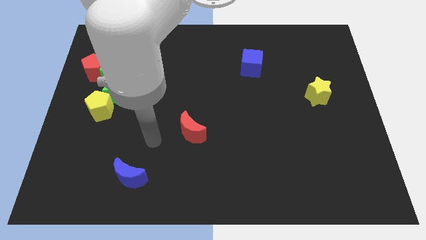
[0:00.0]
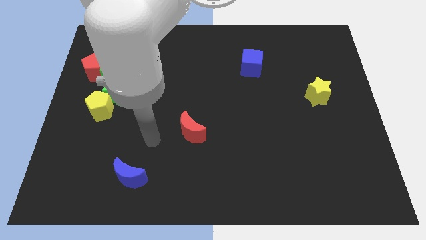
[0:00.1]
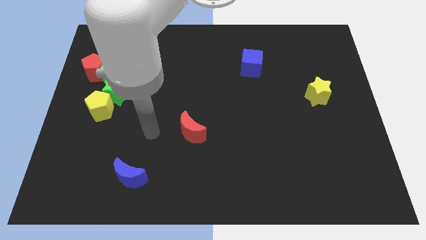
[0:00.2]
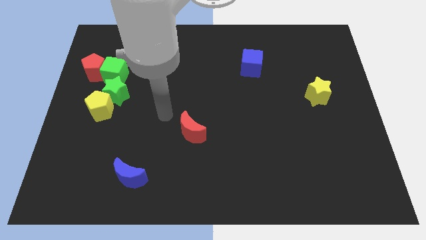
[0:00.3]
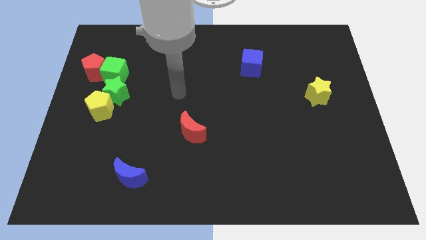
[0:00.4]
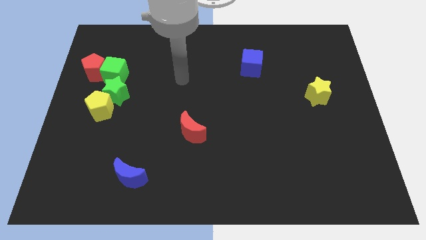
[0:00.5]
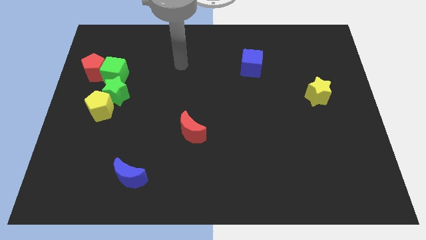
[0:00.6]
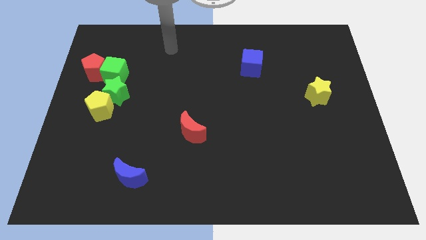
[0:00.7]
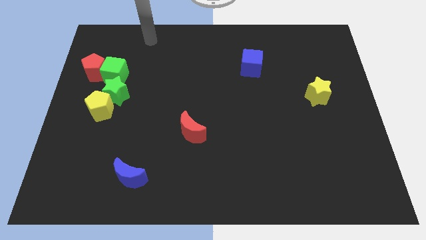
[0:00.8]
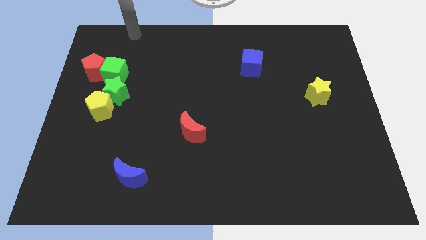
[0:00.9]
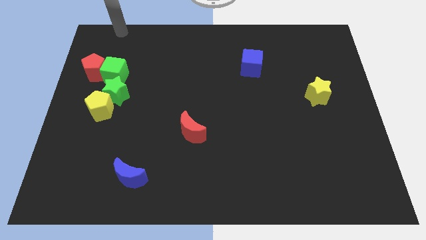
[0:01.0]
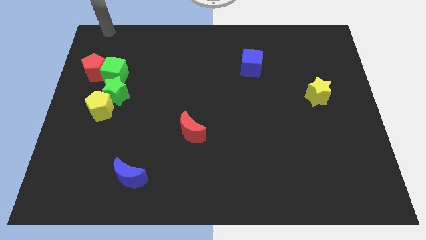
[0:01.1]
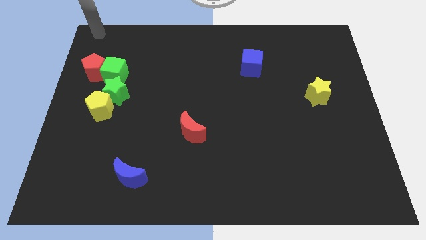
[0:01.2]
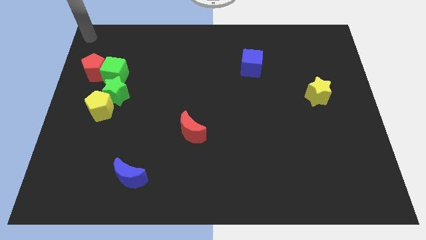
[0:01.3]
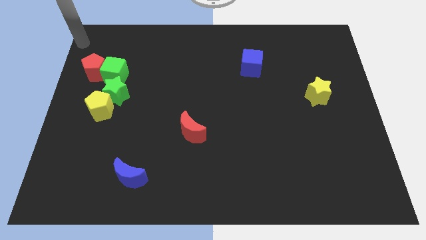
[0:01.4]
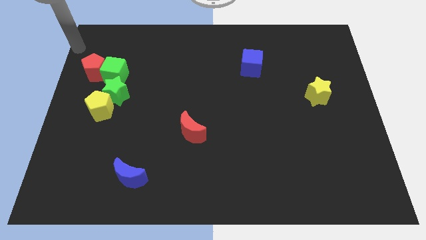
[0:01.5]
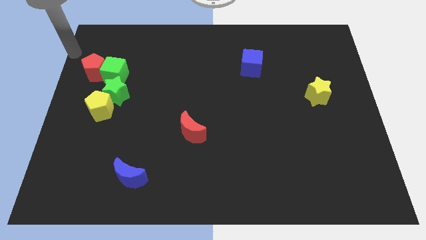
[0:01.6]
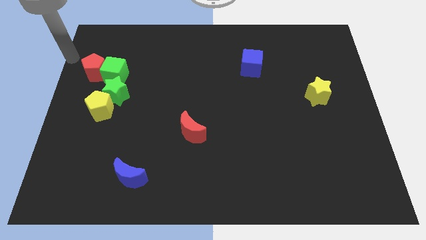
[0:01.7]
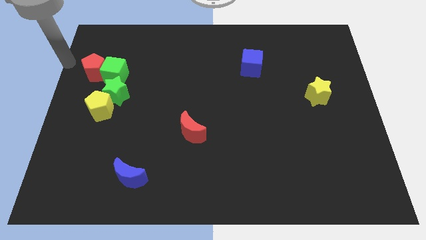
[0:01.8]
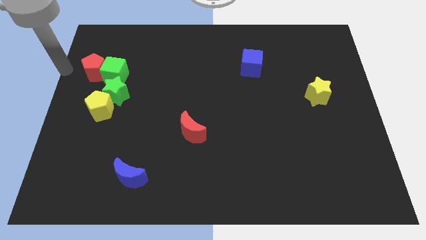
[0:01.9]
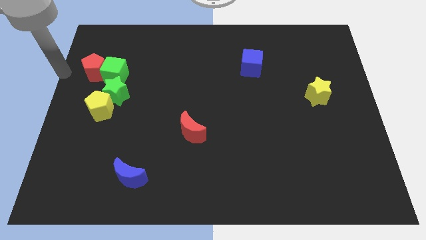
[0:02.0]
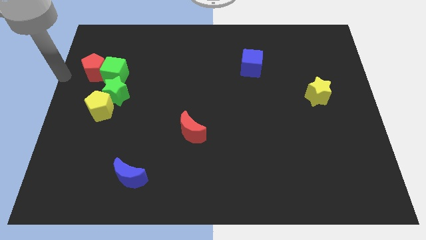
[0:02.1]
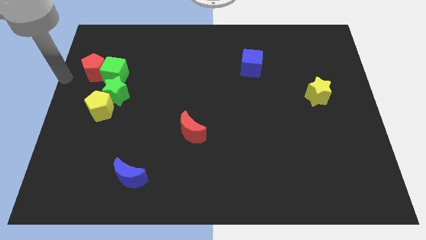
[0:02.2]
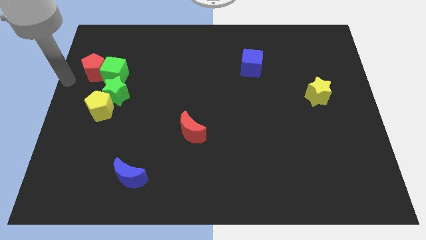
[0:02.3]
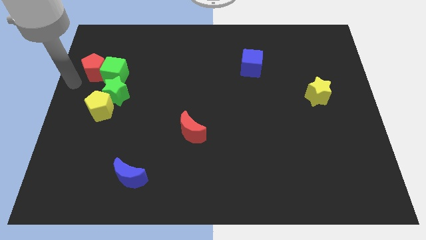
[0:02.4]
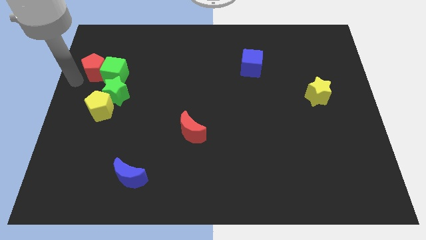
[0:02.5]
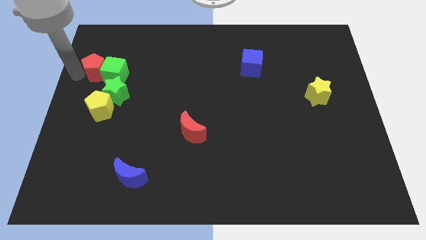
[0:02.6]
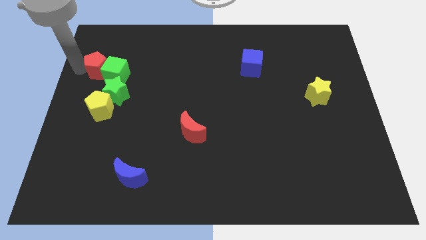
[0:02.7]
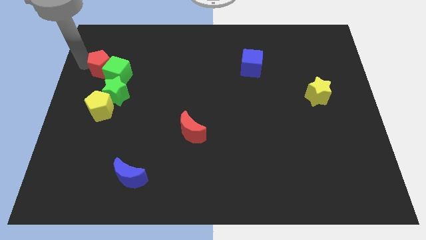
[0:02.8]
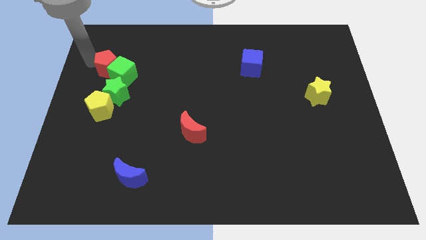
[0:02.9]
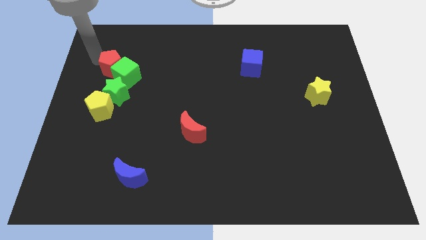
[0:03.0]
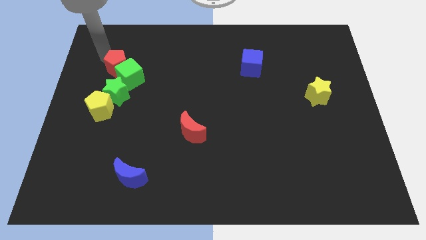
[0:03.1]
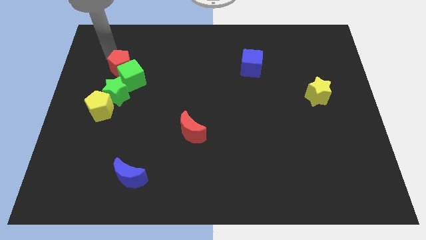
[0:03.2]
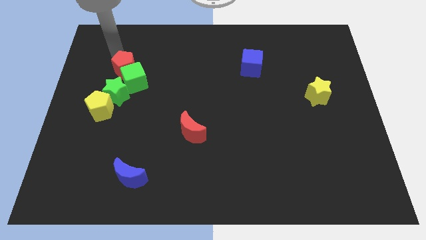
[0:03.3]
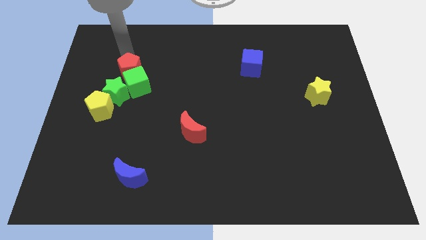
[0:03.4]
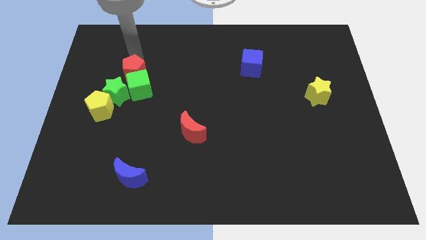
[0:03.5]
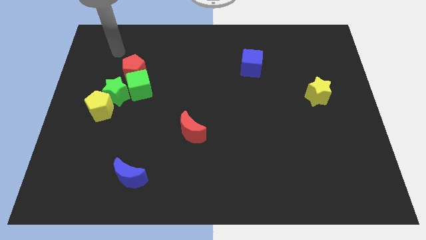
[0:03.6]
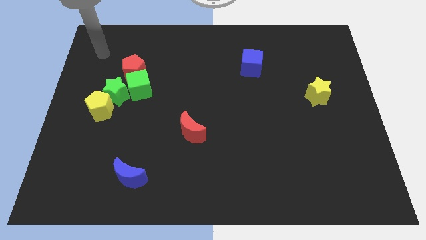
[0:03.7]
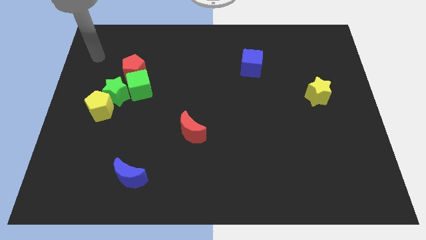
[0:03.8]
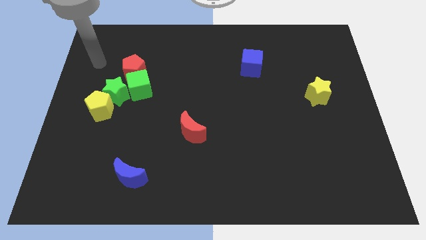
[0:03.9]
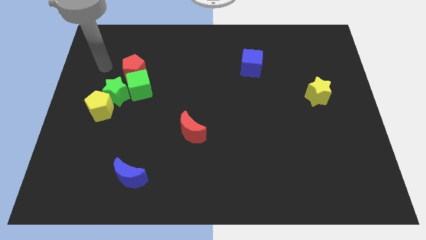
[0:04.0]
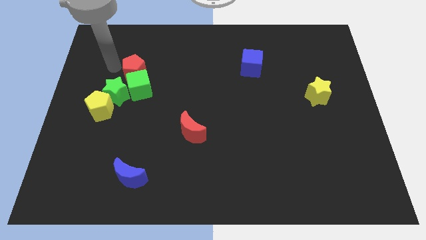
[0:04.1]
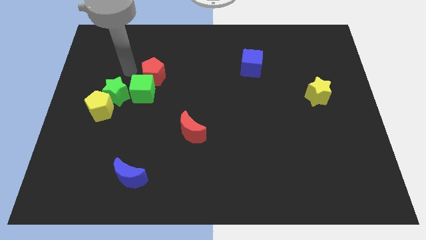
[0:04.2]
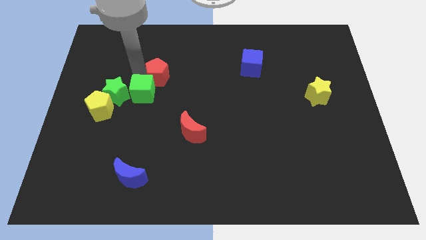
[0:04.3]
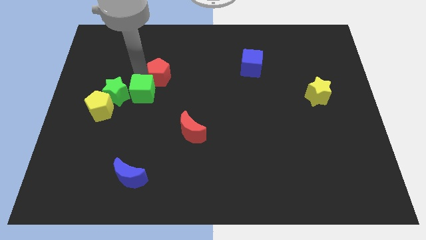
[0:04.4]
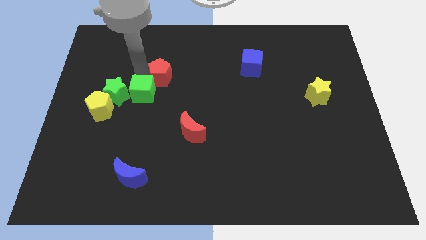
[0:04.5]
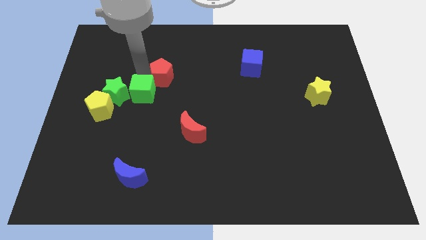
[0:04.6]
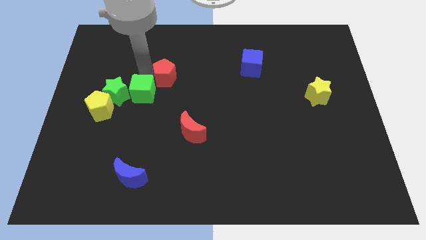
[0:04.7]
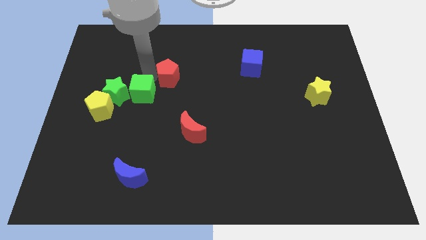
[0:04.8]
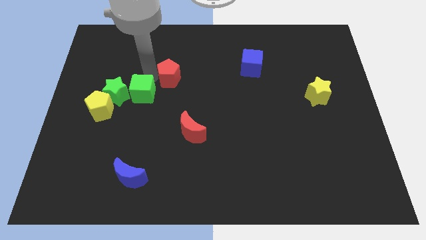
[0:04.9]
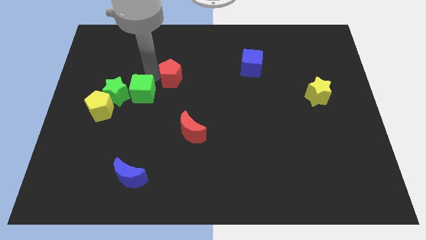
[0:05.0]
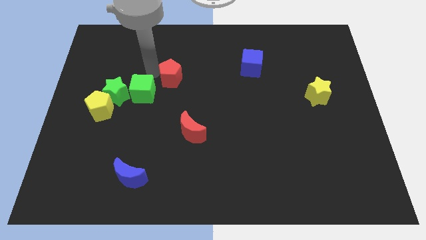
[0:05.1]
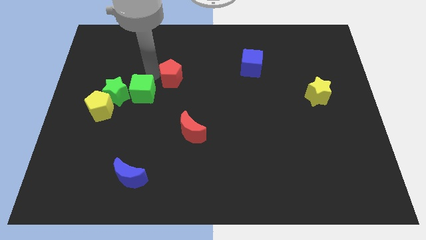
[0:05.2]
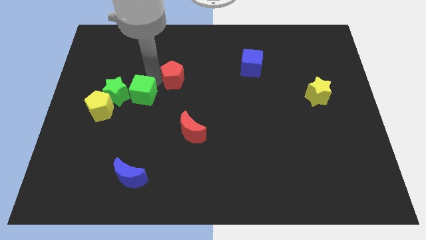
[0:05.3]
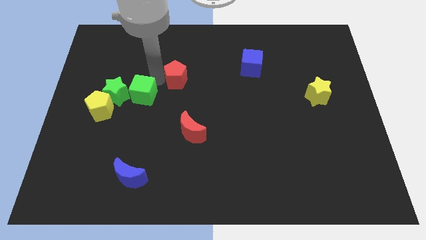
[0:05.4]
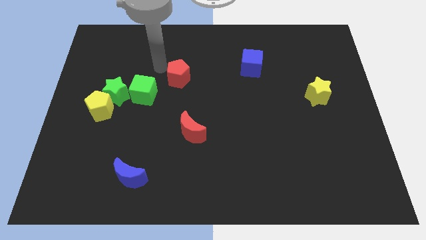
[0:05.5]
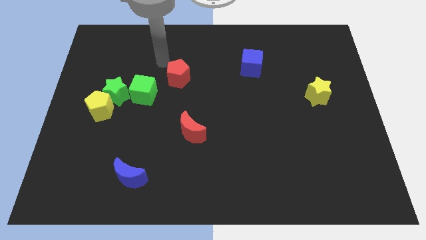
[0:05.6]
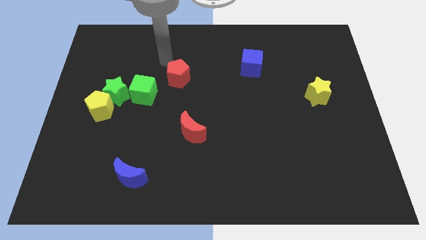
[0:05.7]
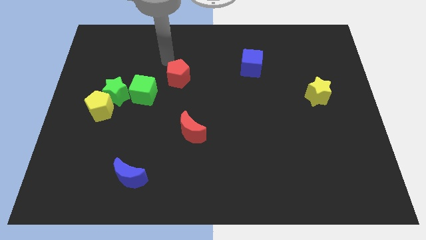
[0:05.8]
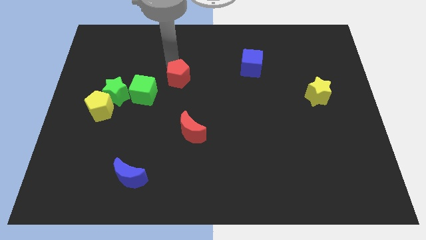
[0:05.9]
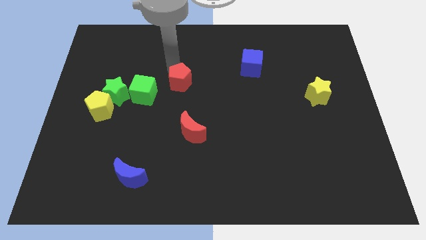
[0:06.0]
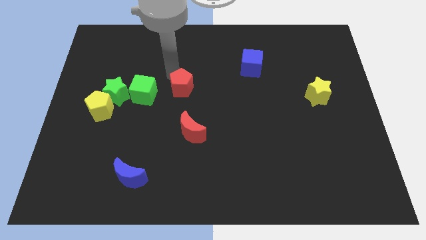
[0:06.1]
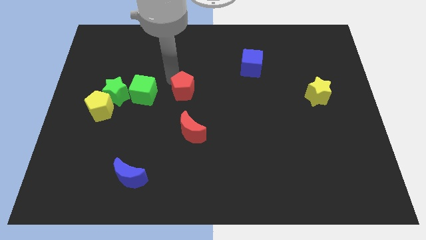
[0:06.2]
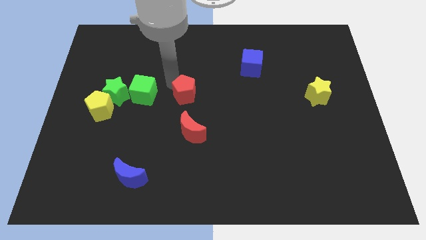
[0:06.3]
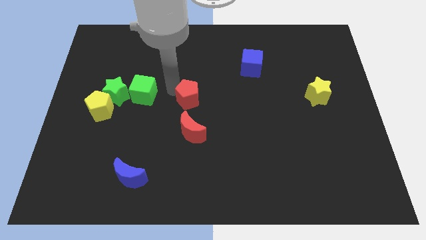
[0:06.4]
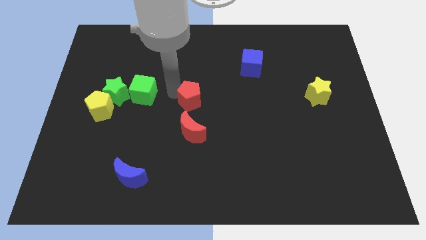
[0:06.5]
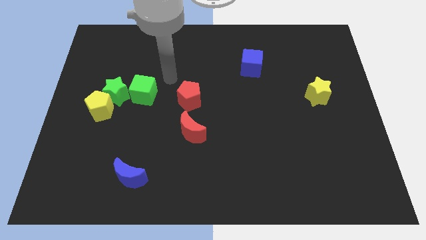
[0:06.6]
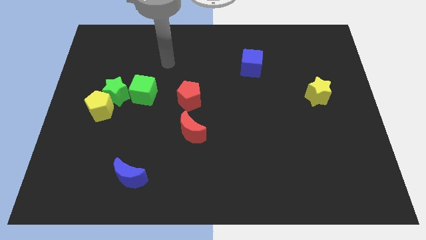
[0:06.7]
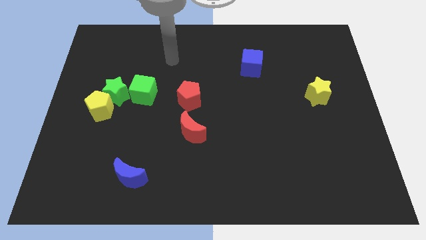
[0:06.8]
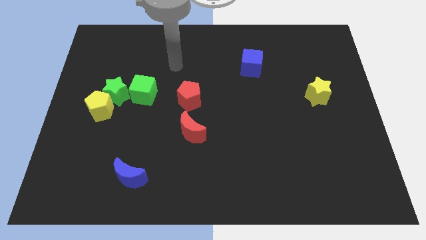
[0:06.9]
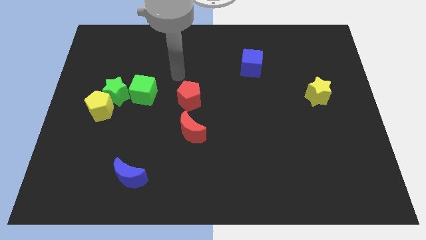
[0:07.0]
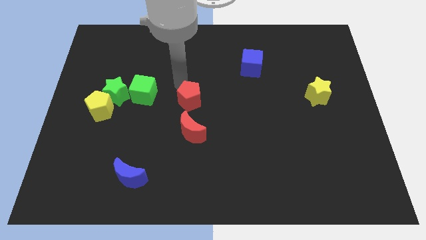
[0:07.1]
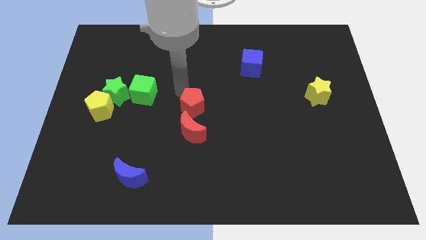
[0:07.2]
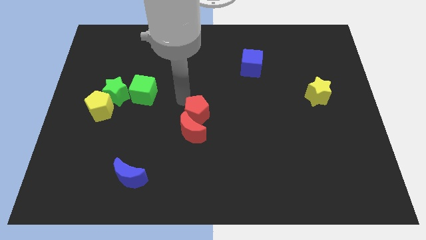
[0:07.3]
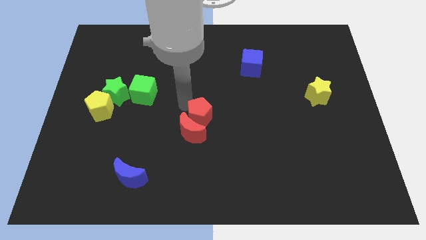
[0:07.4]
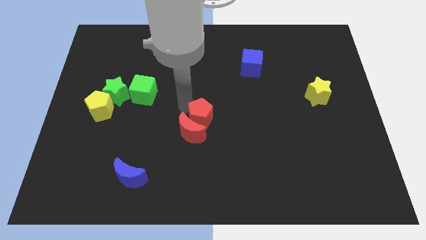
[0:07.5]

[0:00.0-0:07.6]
put the red pentagon towards the red moon

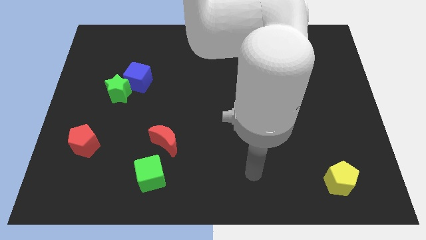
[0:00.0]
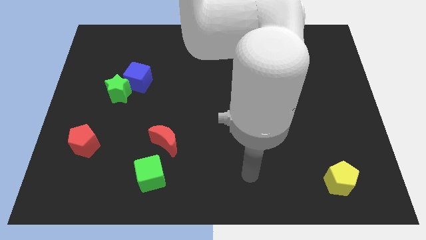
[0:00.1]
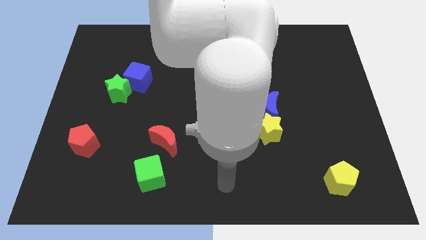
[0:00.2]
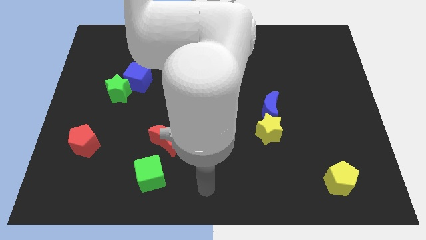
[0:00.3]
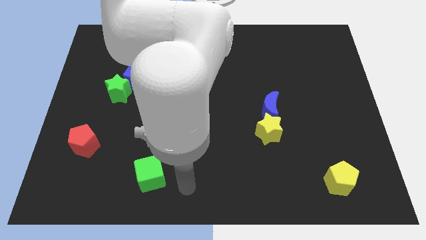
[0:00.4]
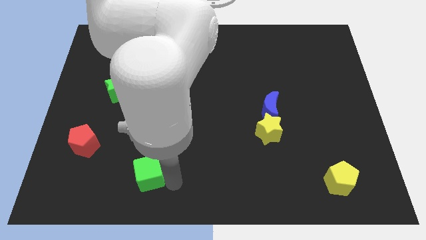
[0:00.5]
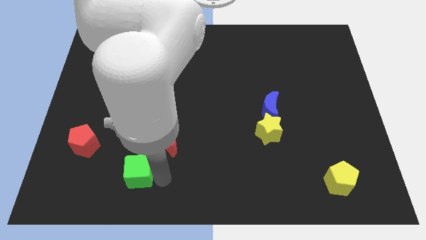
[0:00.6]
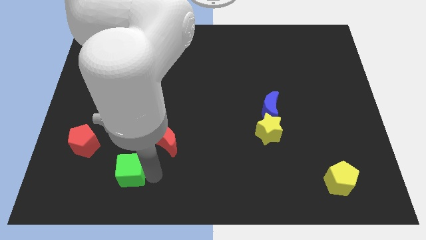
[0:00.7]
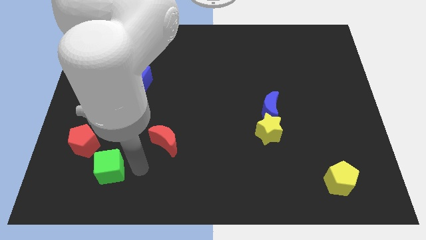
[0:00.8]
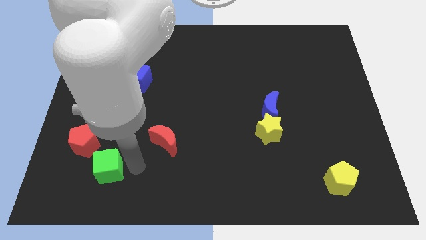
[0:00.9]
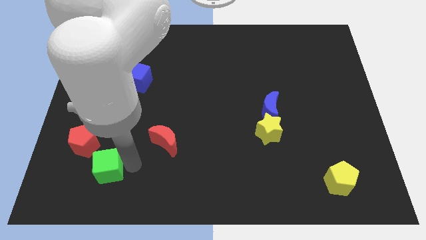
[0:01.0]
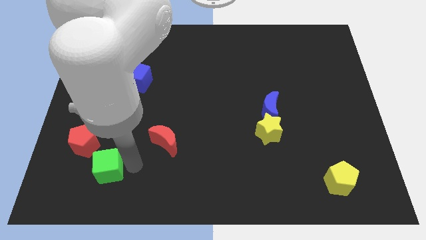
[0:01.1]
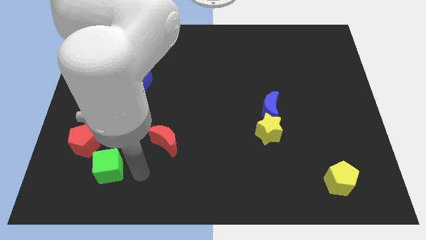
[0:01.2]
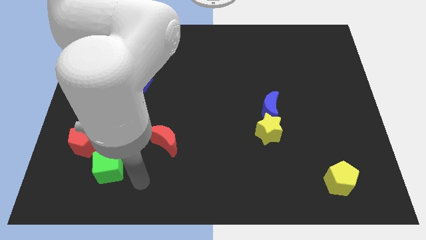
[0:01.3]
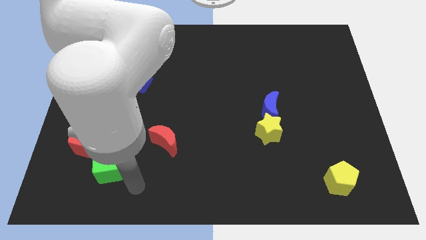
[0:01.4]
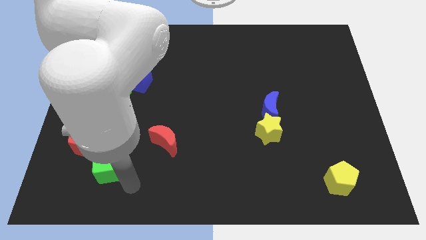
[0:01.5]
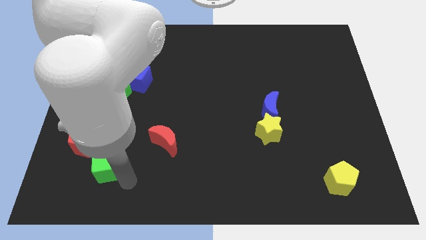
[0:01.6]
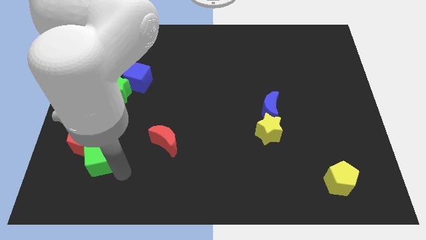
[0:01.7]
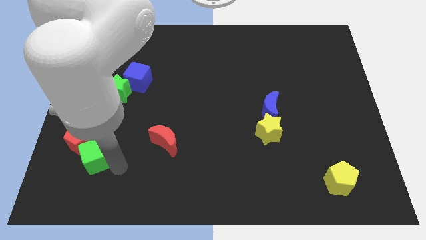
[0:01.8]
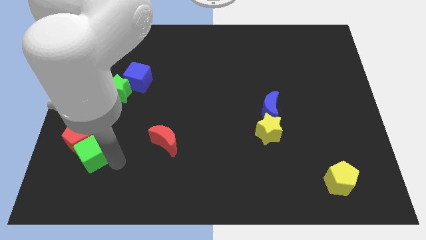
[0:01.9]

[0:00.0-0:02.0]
put the green cube to the red pentagon
